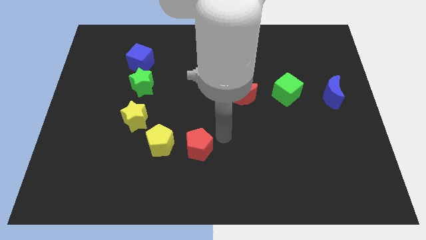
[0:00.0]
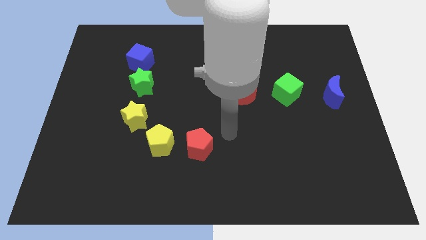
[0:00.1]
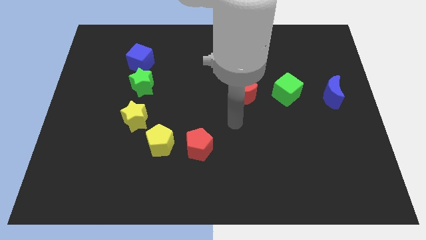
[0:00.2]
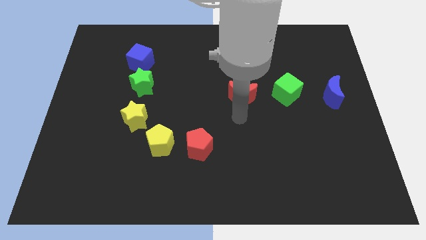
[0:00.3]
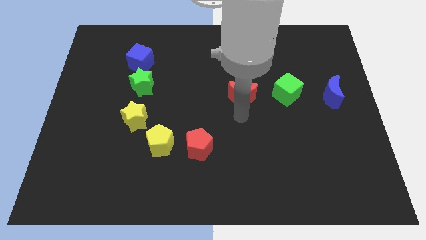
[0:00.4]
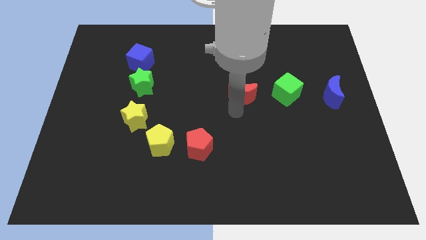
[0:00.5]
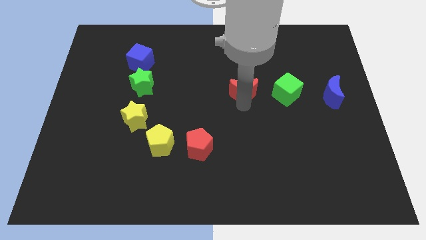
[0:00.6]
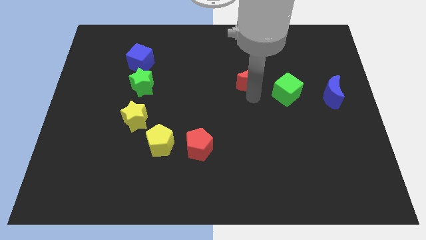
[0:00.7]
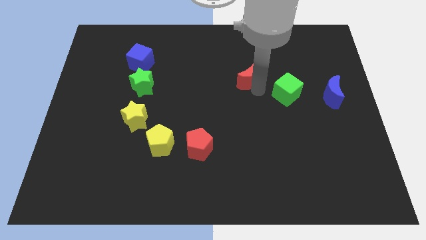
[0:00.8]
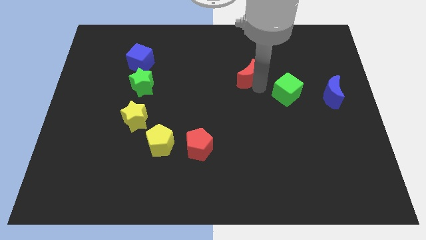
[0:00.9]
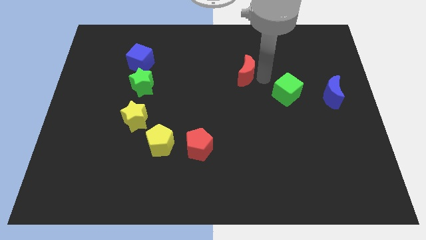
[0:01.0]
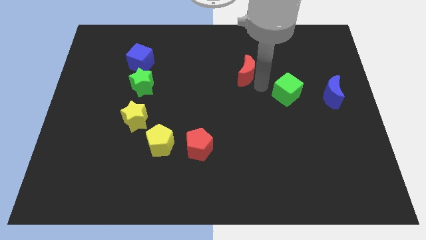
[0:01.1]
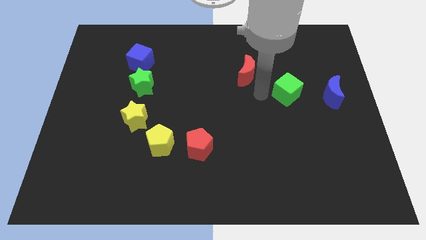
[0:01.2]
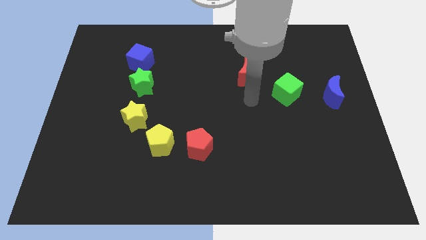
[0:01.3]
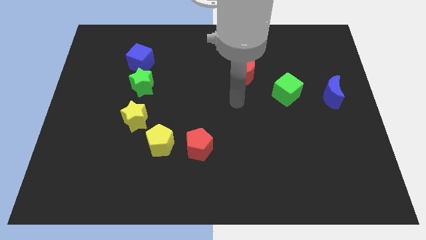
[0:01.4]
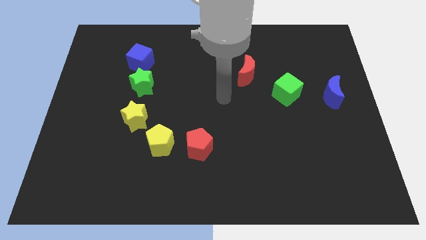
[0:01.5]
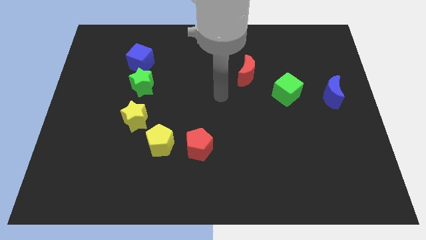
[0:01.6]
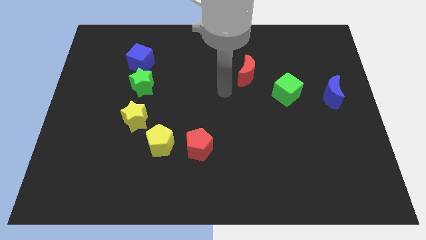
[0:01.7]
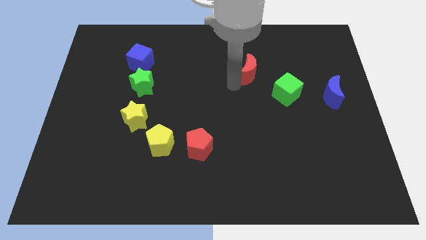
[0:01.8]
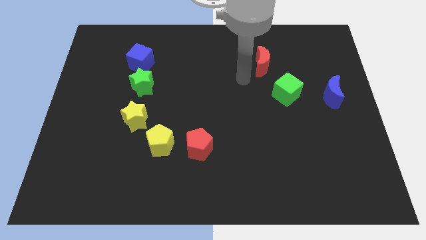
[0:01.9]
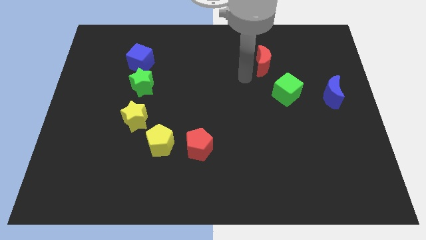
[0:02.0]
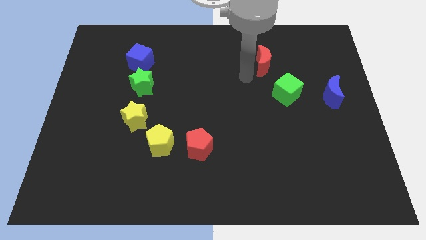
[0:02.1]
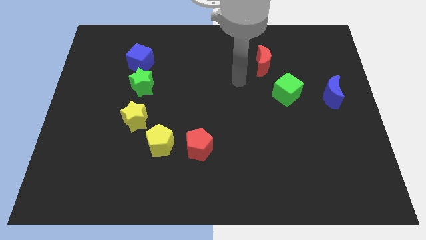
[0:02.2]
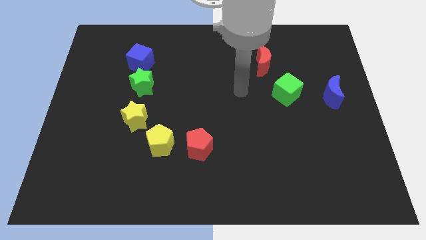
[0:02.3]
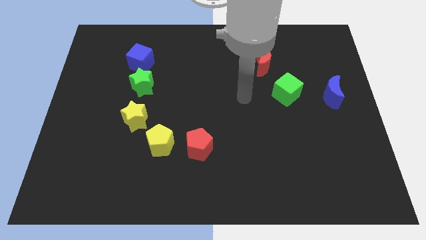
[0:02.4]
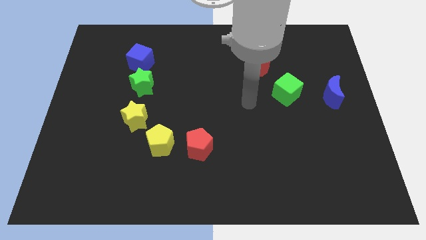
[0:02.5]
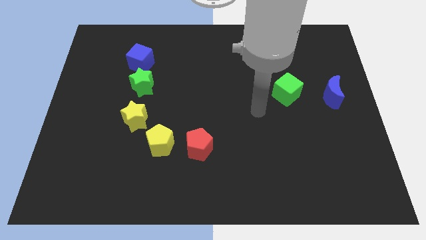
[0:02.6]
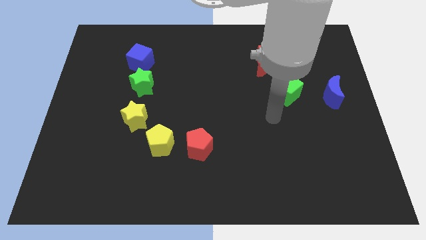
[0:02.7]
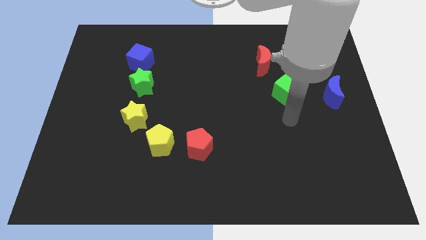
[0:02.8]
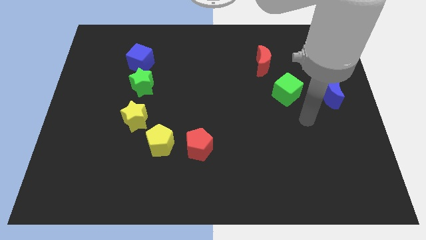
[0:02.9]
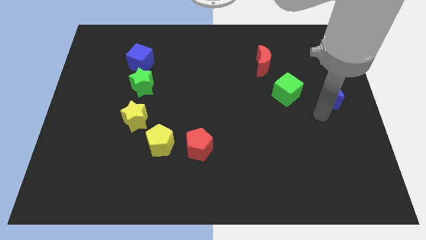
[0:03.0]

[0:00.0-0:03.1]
move red crescent slightly upwards

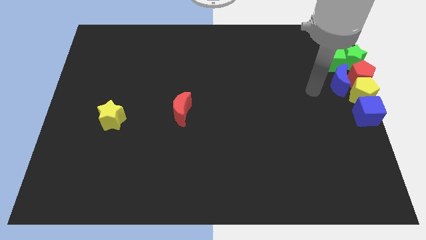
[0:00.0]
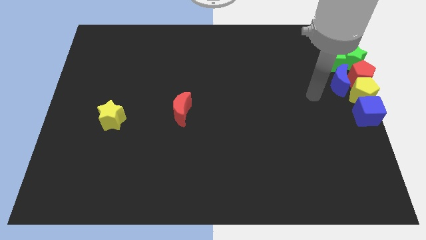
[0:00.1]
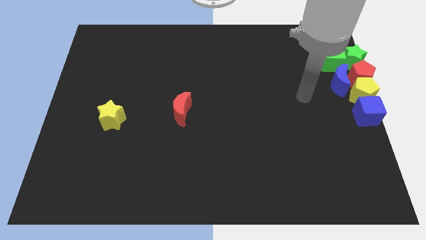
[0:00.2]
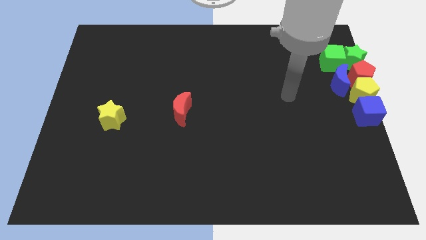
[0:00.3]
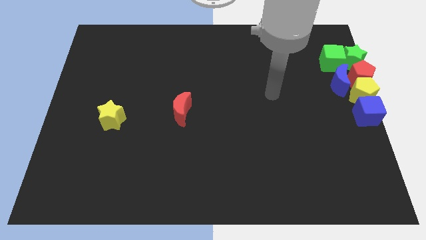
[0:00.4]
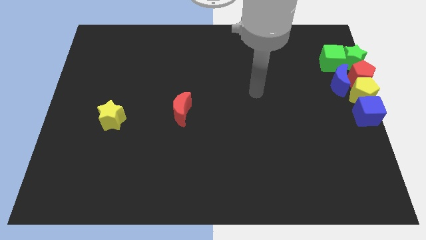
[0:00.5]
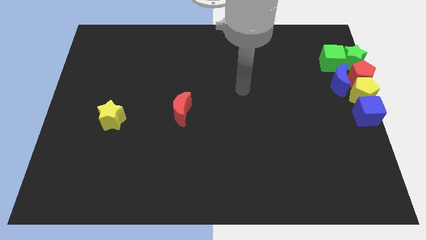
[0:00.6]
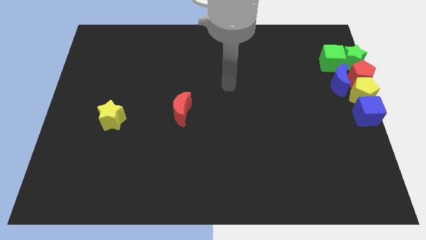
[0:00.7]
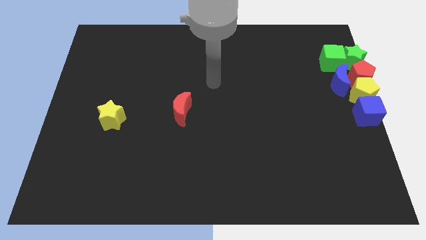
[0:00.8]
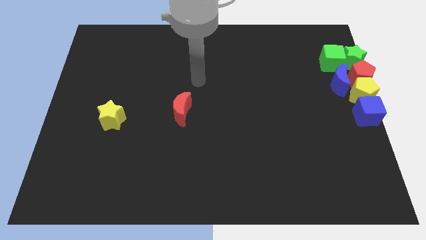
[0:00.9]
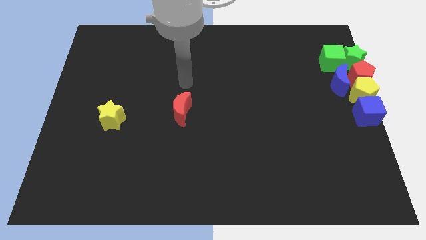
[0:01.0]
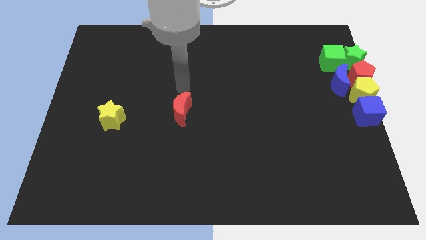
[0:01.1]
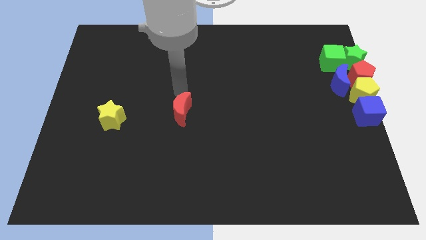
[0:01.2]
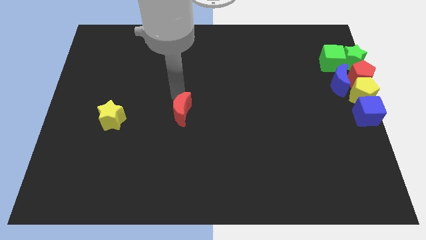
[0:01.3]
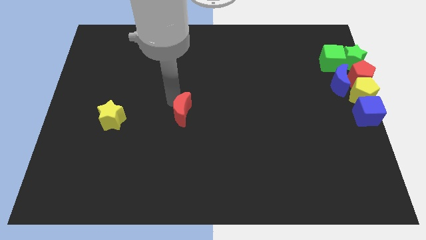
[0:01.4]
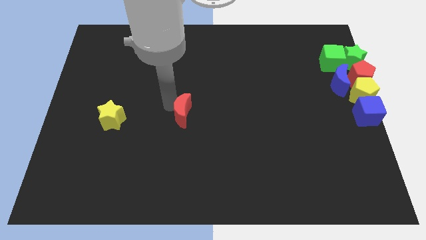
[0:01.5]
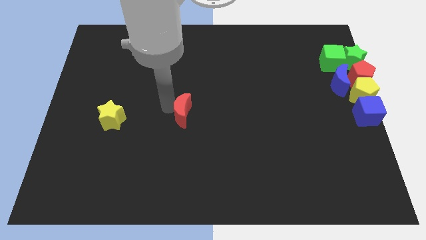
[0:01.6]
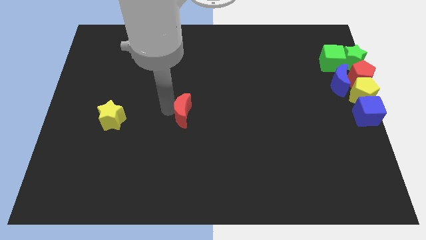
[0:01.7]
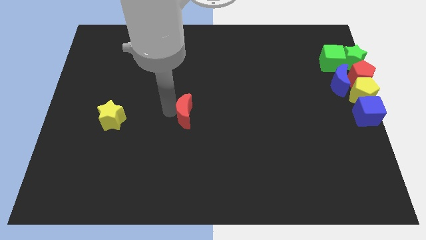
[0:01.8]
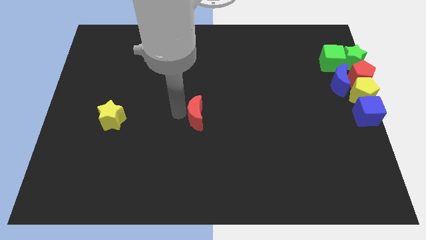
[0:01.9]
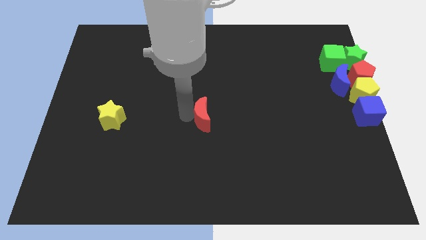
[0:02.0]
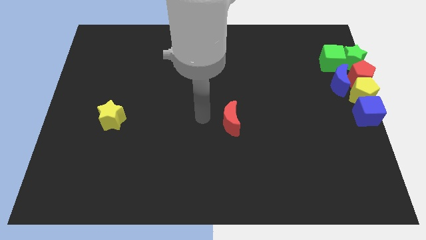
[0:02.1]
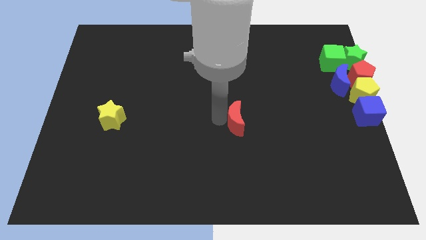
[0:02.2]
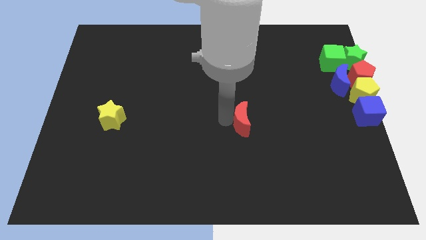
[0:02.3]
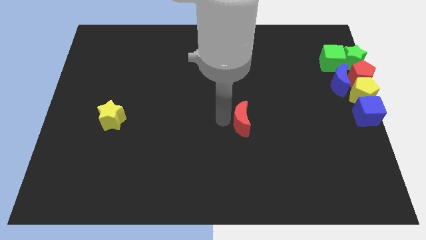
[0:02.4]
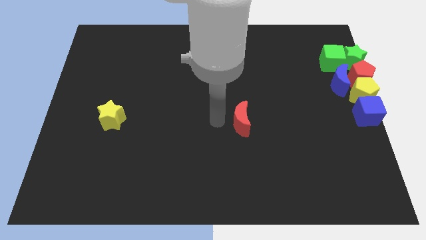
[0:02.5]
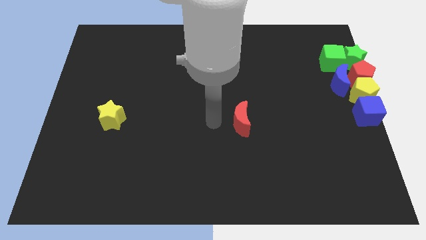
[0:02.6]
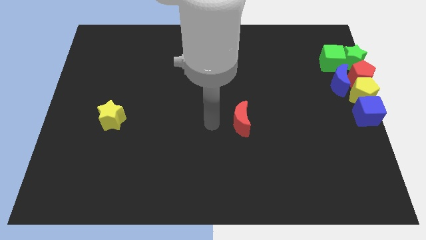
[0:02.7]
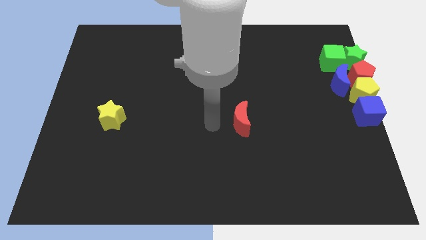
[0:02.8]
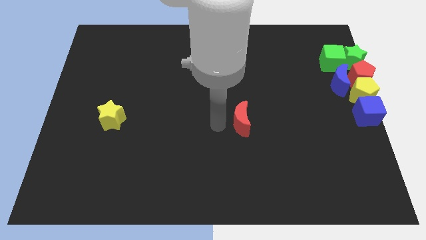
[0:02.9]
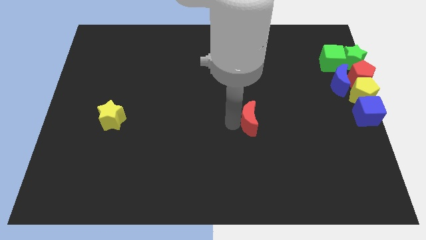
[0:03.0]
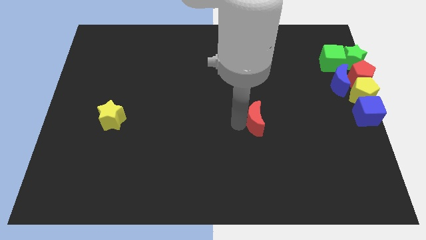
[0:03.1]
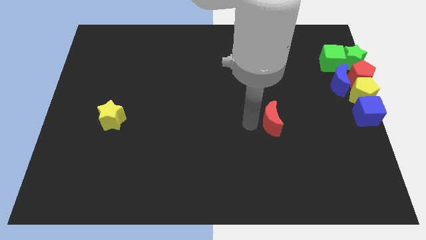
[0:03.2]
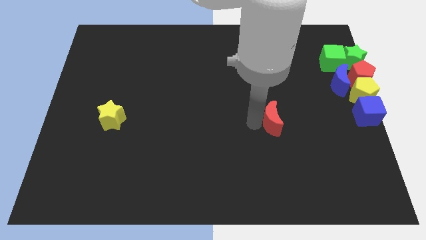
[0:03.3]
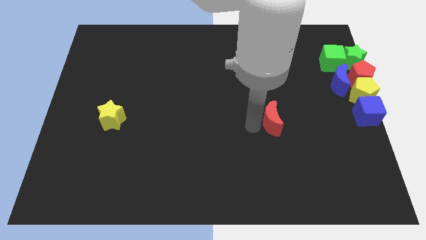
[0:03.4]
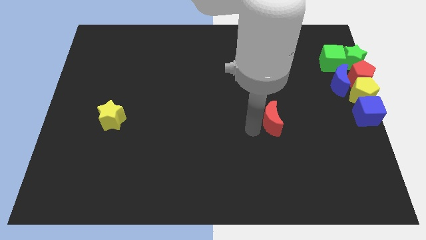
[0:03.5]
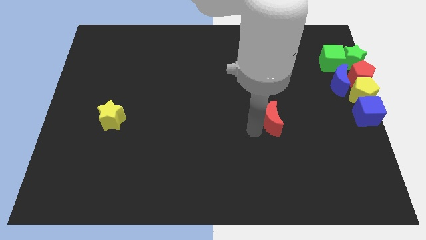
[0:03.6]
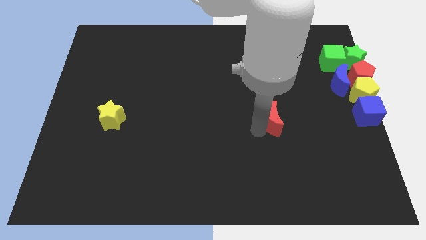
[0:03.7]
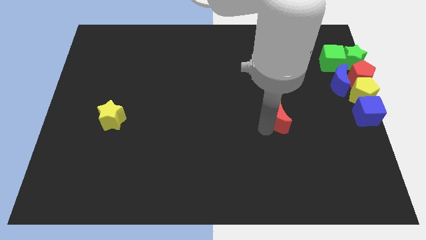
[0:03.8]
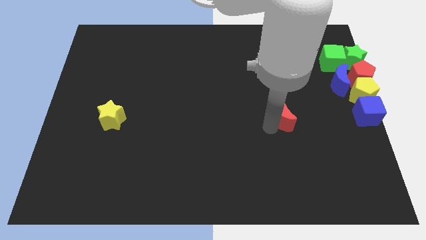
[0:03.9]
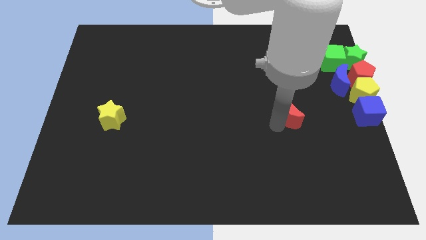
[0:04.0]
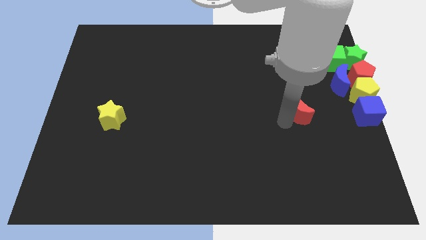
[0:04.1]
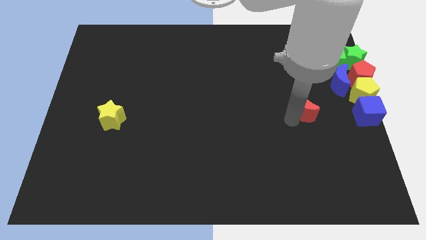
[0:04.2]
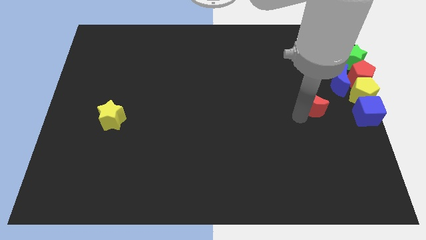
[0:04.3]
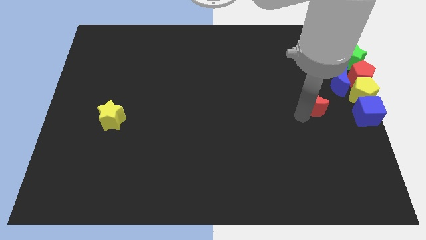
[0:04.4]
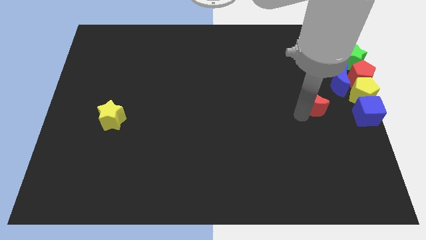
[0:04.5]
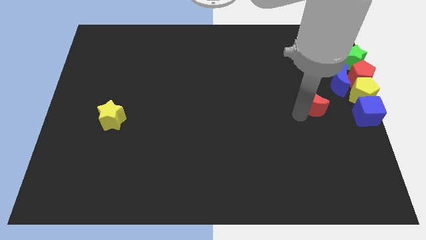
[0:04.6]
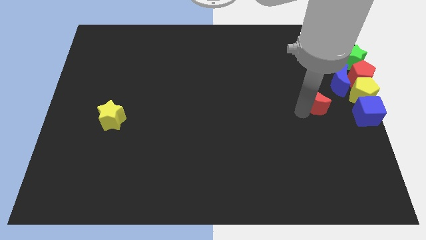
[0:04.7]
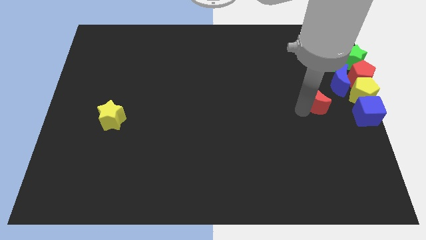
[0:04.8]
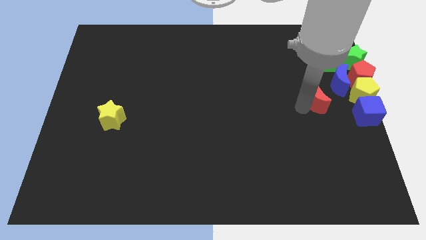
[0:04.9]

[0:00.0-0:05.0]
push the red crescent towards the blue crescent

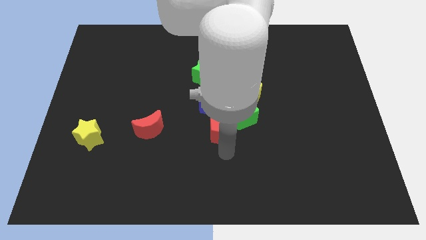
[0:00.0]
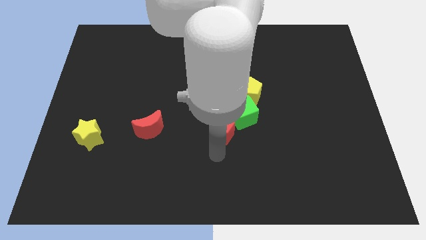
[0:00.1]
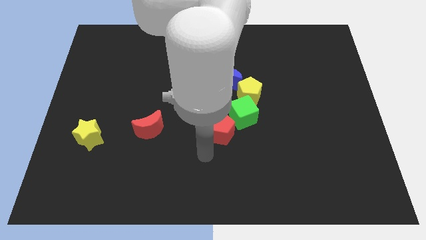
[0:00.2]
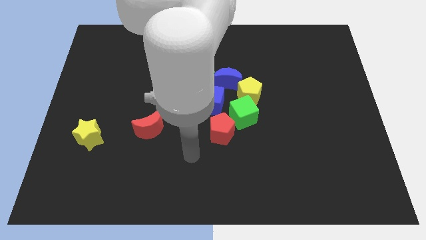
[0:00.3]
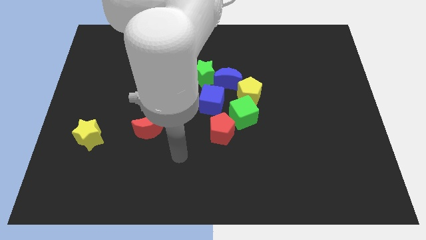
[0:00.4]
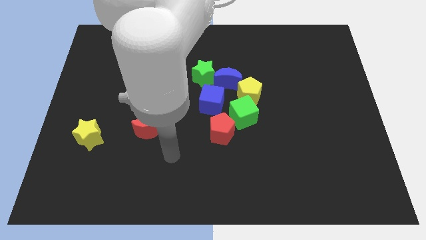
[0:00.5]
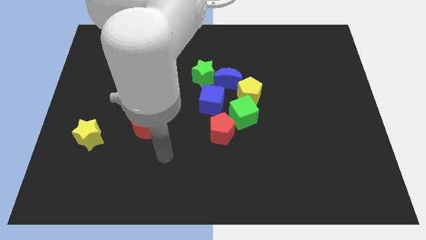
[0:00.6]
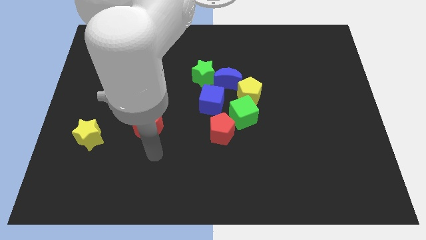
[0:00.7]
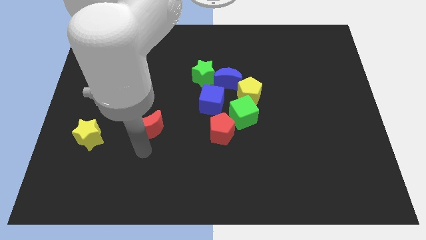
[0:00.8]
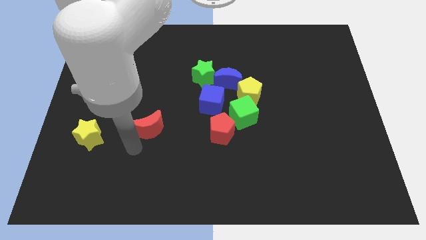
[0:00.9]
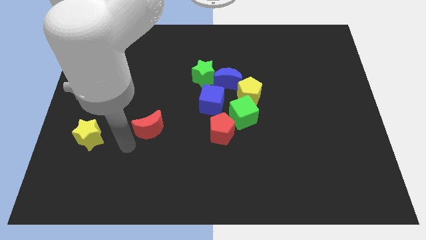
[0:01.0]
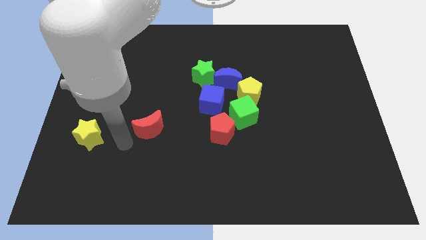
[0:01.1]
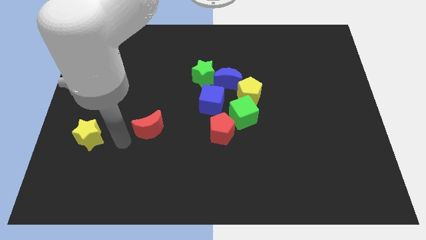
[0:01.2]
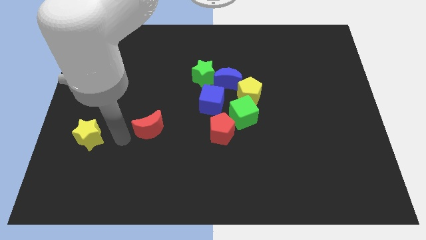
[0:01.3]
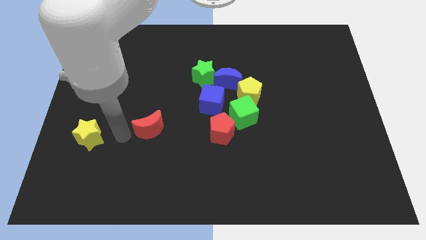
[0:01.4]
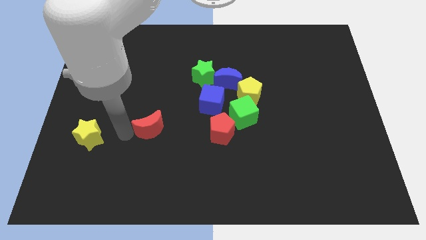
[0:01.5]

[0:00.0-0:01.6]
go and touch the left side of the red crescent
